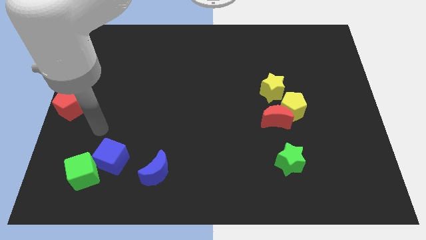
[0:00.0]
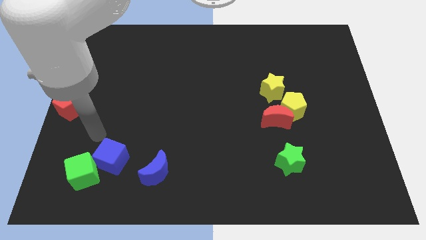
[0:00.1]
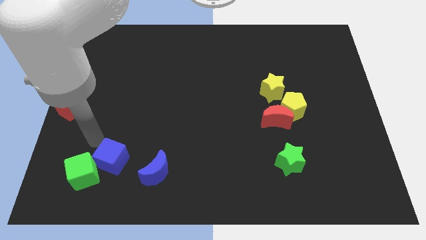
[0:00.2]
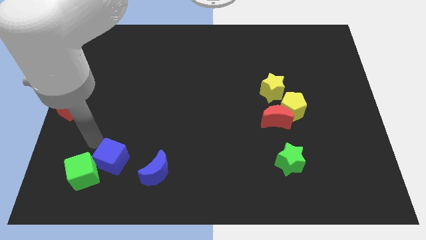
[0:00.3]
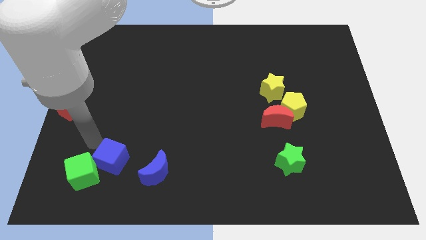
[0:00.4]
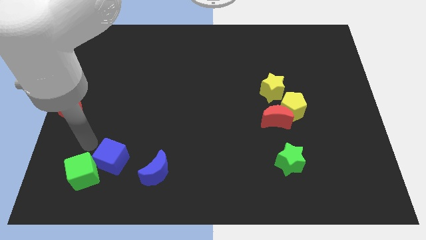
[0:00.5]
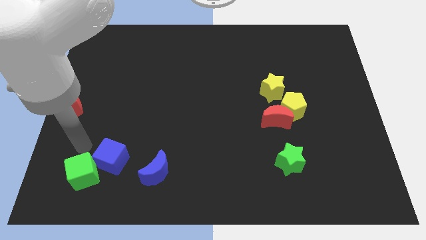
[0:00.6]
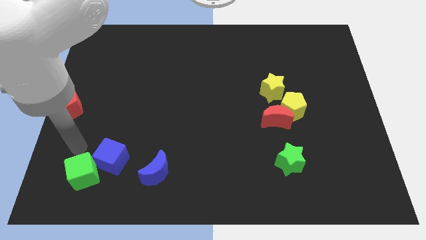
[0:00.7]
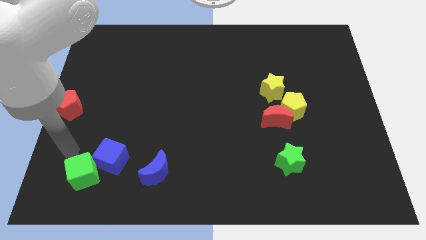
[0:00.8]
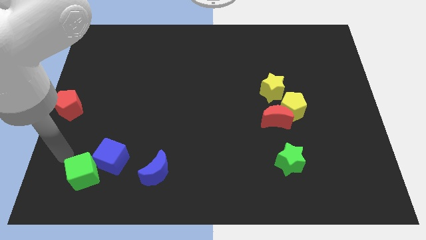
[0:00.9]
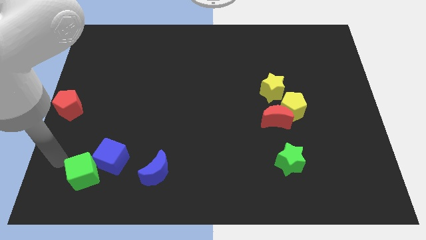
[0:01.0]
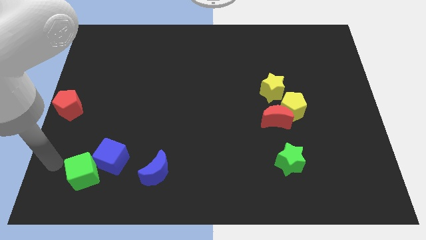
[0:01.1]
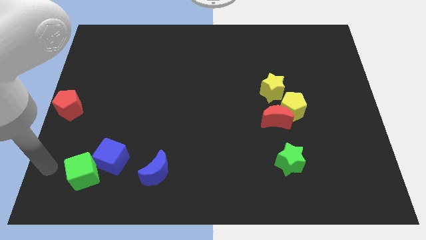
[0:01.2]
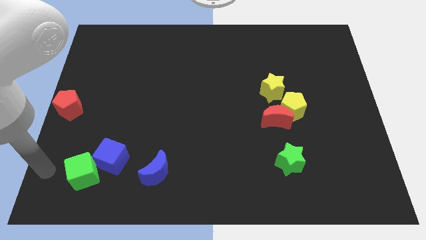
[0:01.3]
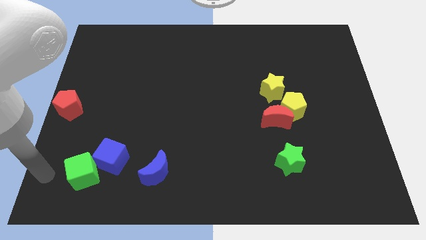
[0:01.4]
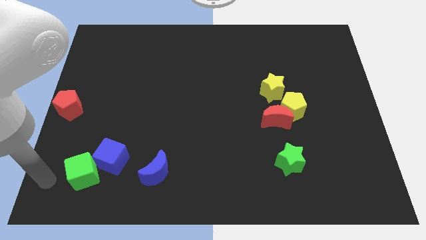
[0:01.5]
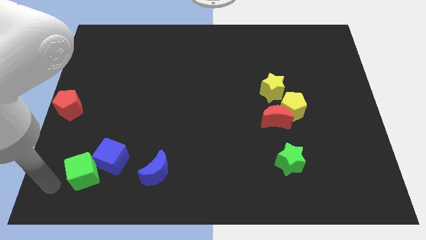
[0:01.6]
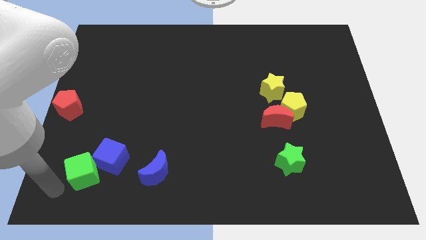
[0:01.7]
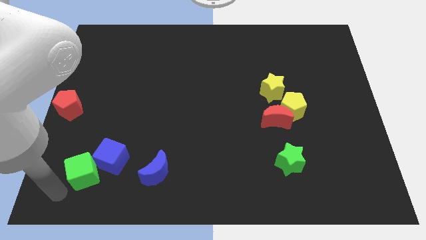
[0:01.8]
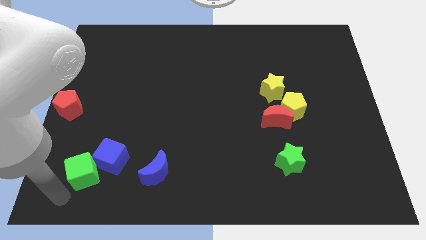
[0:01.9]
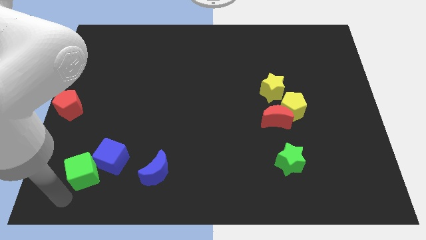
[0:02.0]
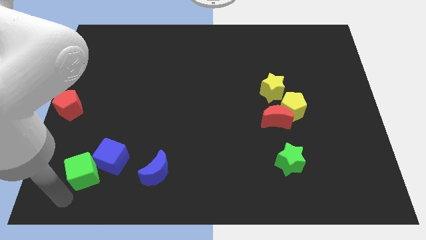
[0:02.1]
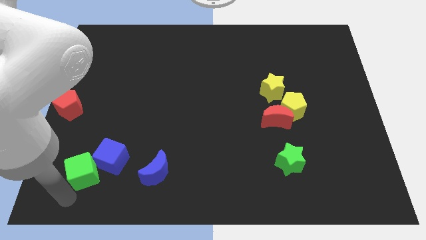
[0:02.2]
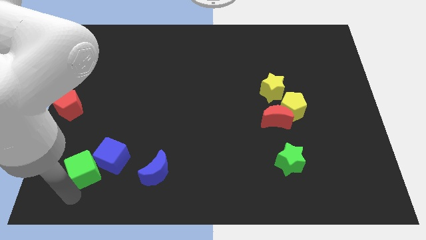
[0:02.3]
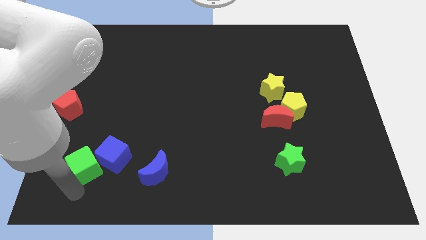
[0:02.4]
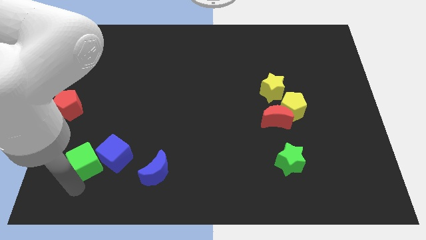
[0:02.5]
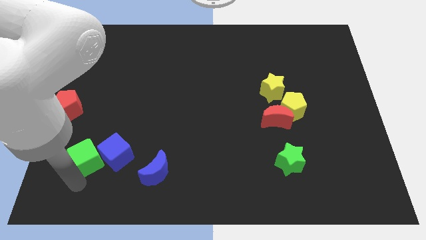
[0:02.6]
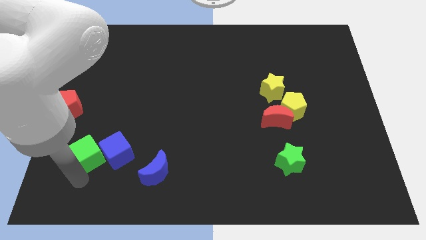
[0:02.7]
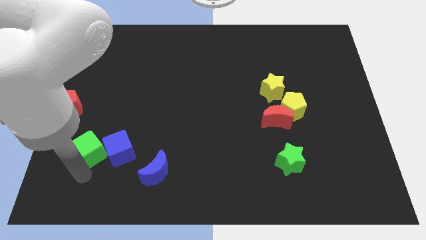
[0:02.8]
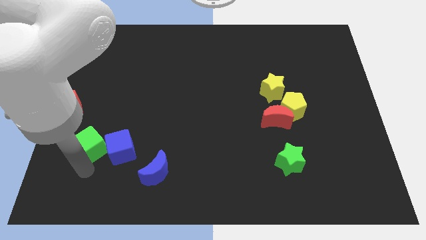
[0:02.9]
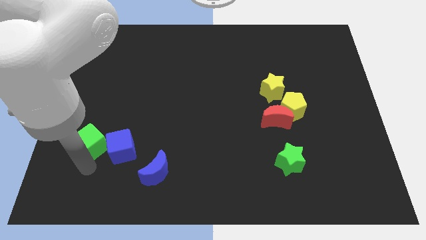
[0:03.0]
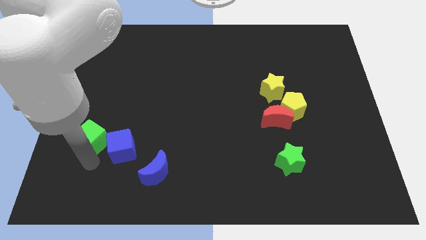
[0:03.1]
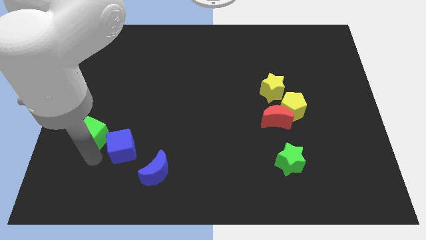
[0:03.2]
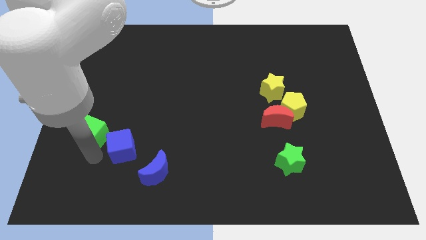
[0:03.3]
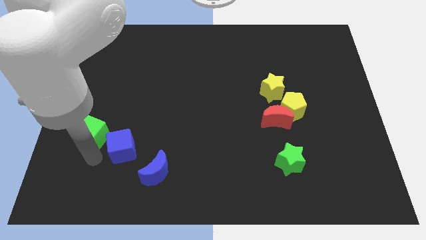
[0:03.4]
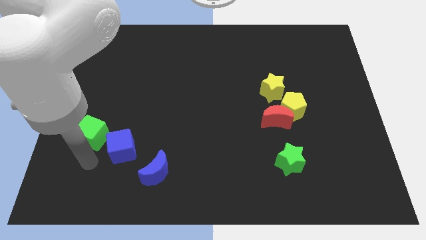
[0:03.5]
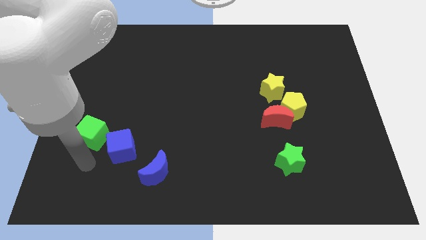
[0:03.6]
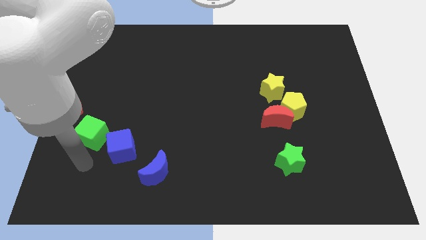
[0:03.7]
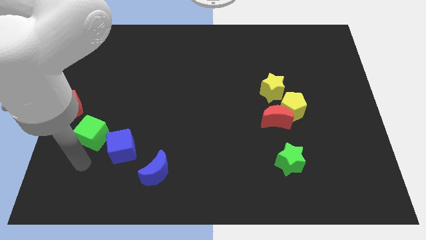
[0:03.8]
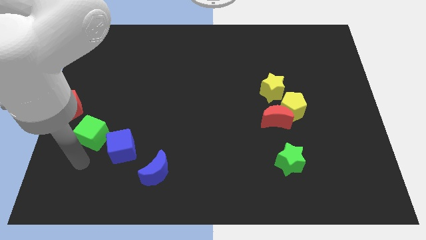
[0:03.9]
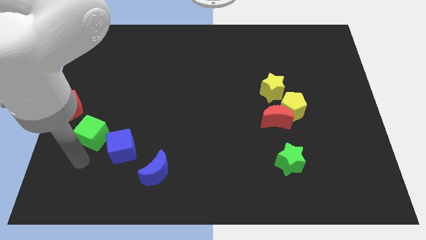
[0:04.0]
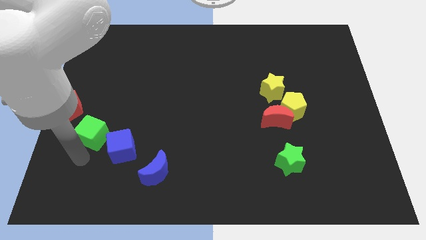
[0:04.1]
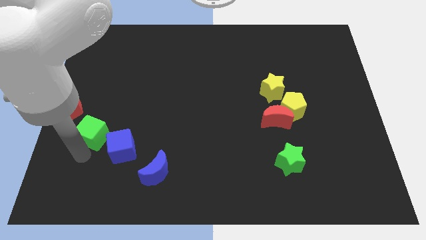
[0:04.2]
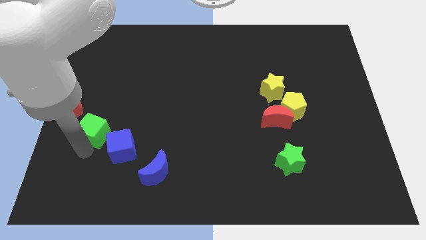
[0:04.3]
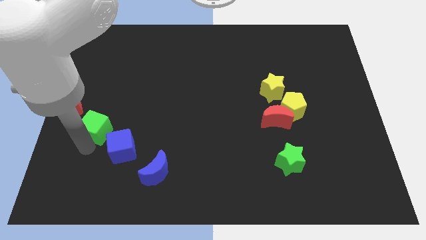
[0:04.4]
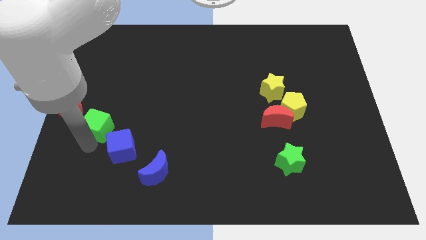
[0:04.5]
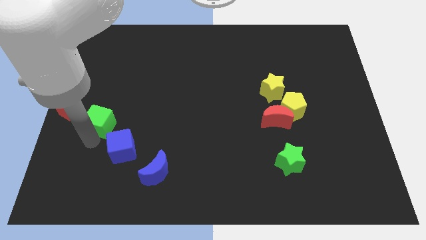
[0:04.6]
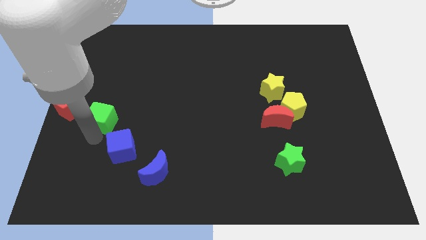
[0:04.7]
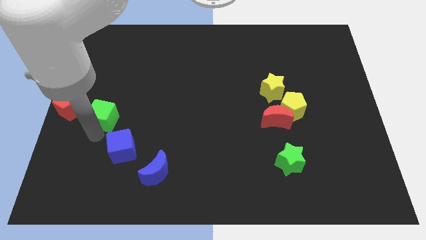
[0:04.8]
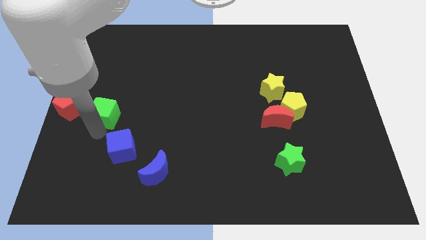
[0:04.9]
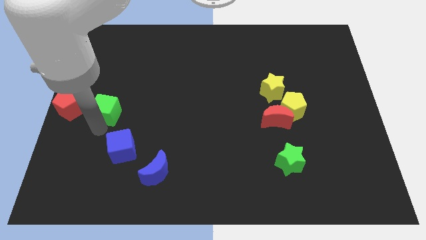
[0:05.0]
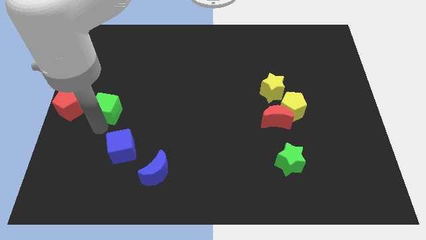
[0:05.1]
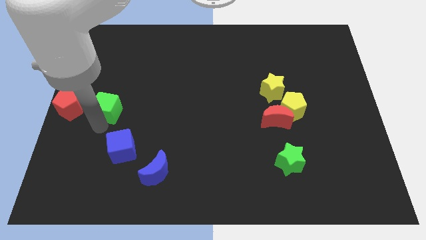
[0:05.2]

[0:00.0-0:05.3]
place the green cube to the right of the red pentagon

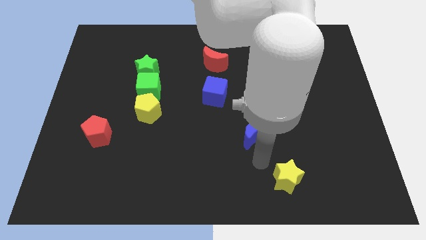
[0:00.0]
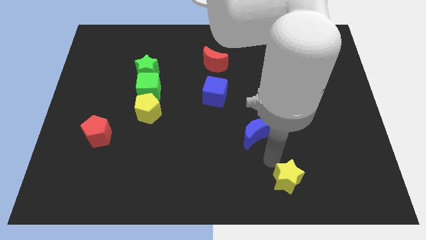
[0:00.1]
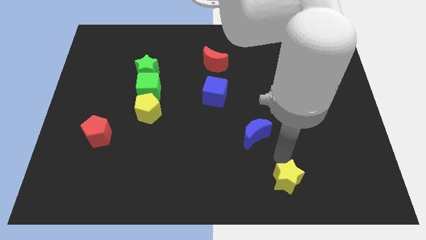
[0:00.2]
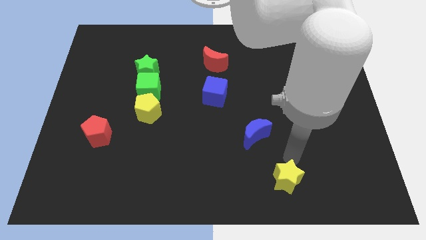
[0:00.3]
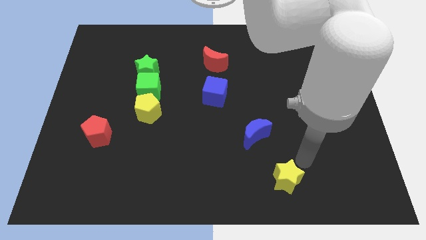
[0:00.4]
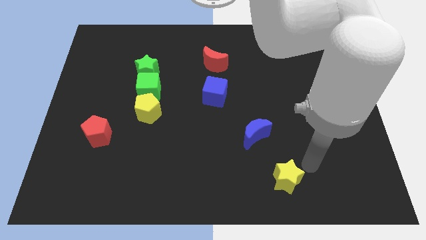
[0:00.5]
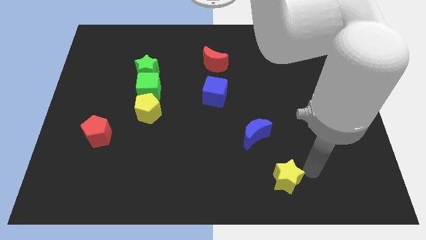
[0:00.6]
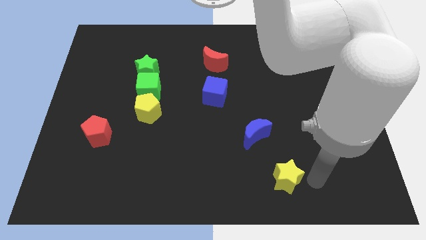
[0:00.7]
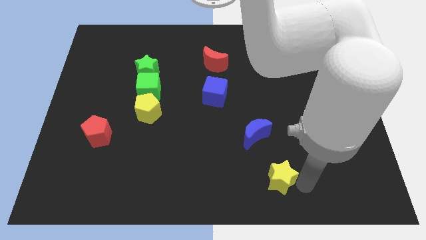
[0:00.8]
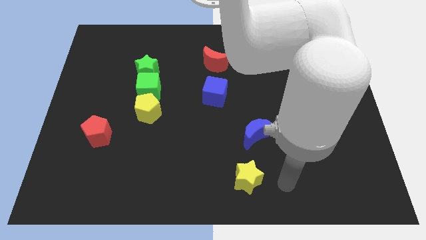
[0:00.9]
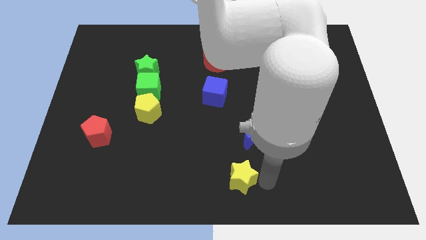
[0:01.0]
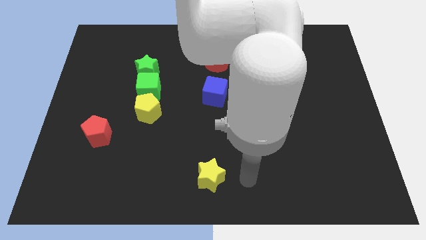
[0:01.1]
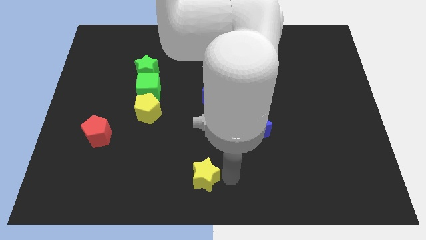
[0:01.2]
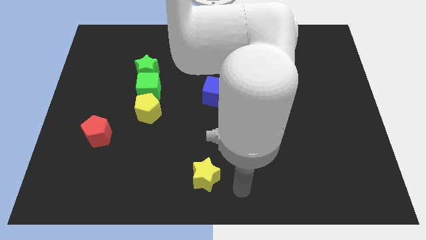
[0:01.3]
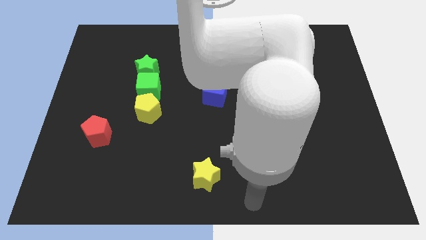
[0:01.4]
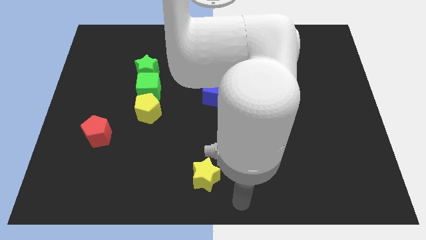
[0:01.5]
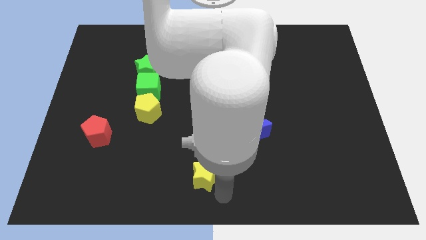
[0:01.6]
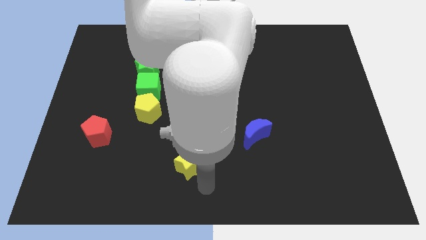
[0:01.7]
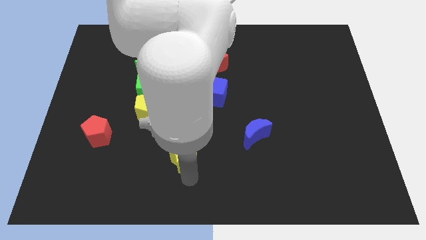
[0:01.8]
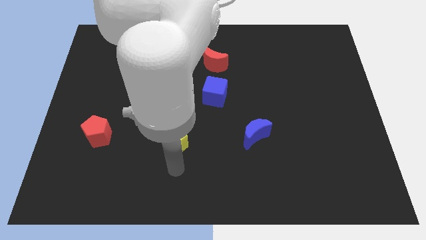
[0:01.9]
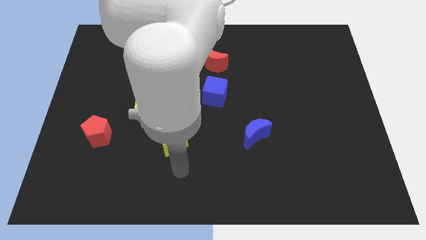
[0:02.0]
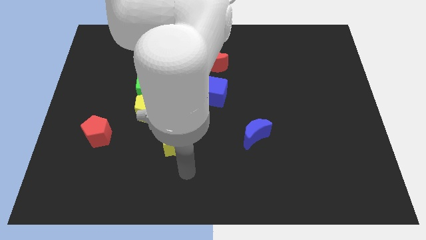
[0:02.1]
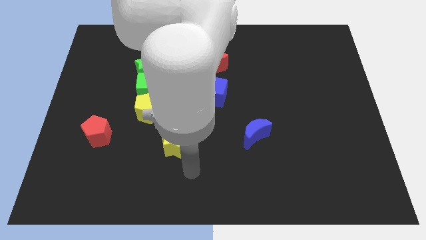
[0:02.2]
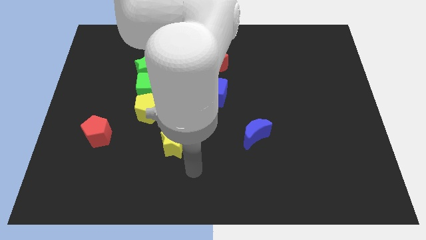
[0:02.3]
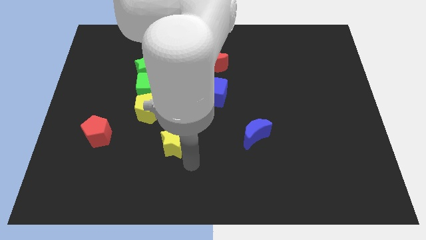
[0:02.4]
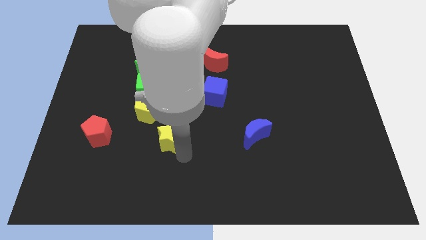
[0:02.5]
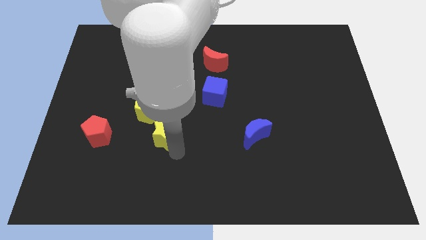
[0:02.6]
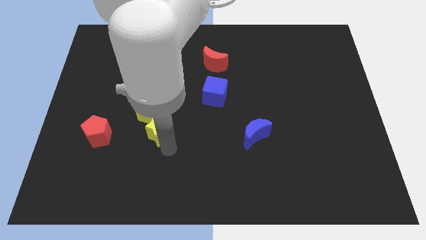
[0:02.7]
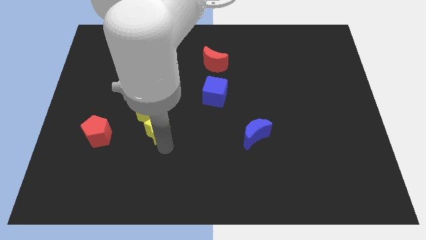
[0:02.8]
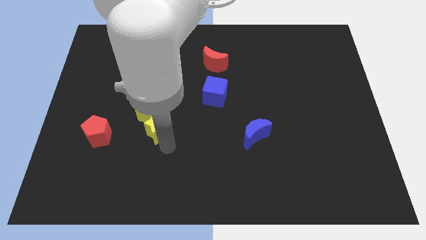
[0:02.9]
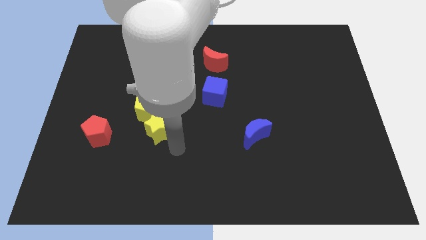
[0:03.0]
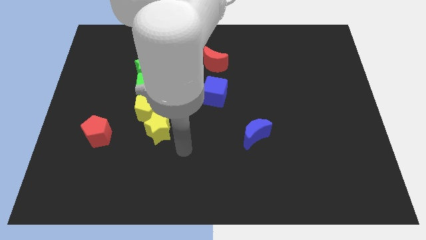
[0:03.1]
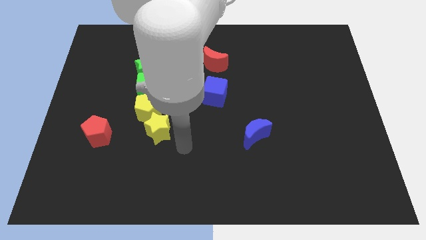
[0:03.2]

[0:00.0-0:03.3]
push the yellow star into the yellow pentagon

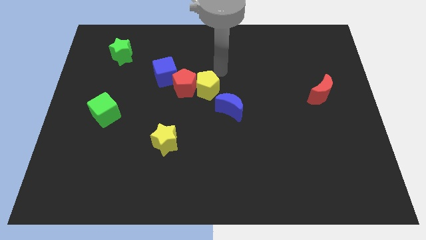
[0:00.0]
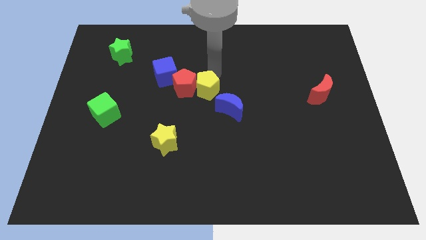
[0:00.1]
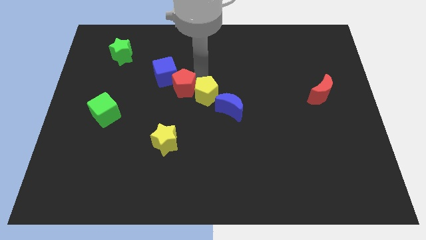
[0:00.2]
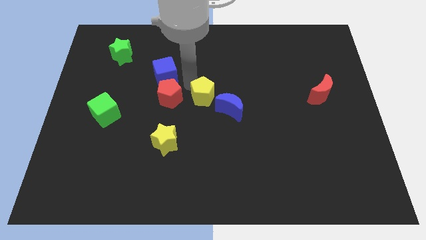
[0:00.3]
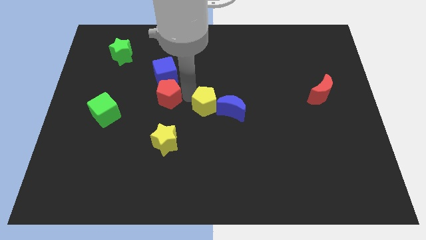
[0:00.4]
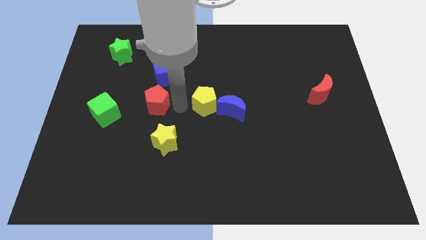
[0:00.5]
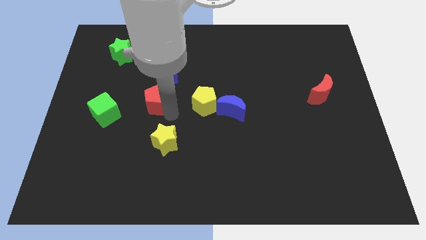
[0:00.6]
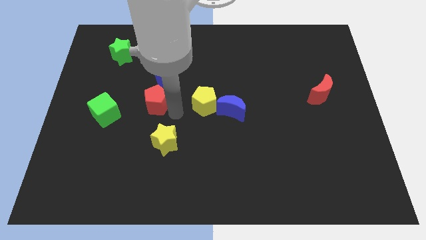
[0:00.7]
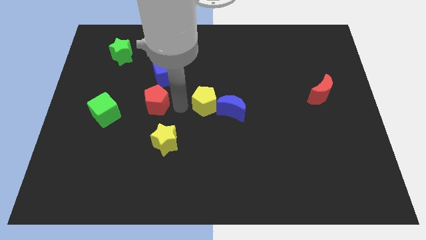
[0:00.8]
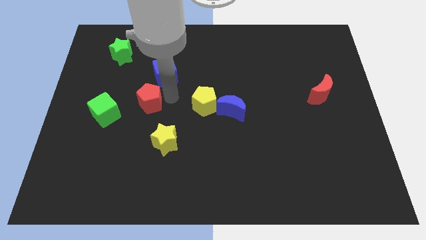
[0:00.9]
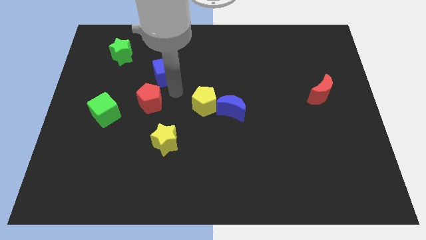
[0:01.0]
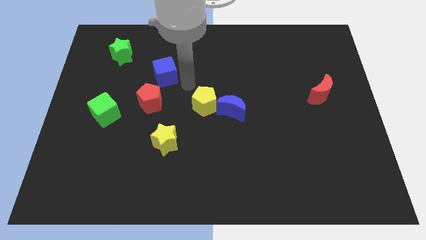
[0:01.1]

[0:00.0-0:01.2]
separate red pentagon and yellow pentagon
